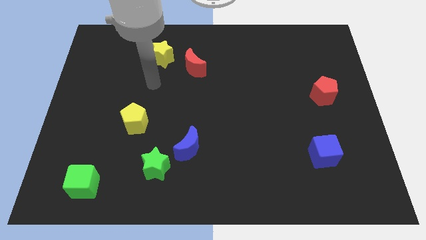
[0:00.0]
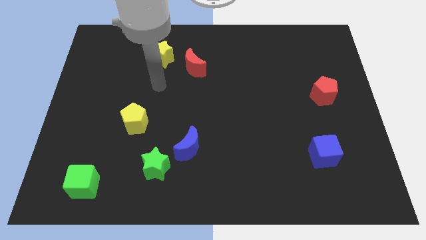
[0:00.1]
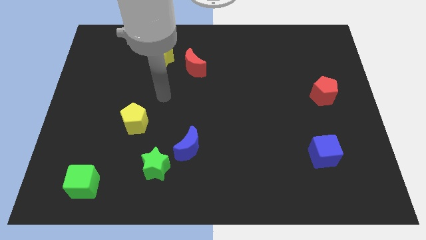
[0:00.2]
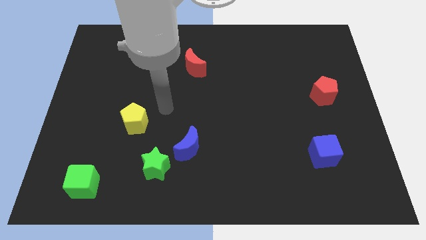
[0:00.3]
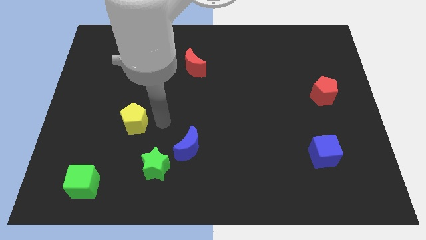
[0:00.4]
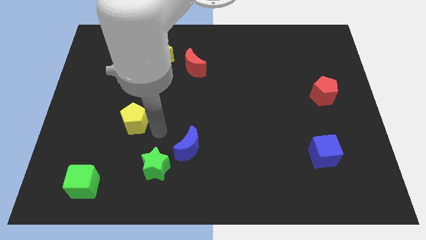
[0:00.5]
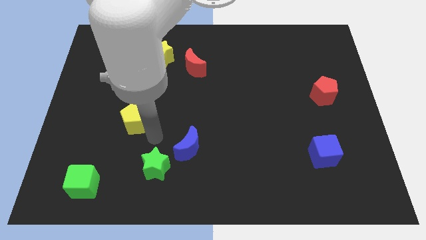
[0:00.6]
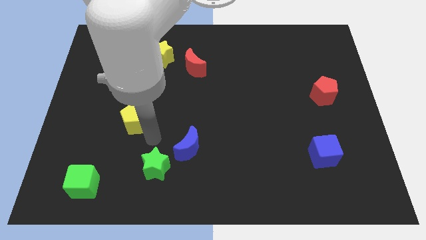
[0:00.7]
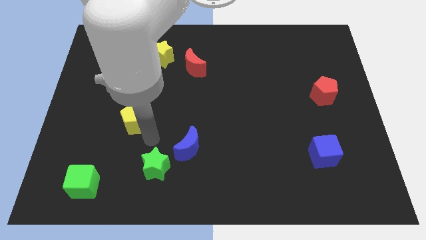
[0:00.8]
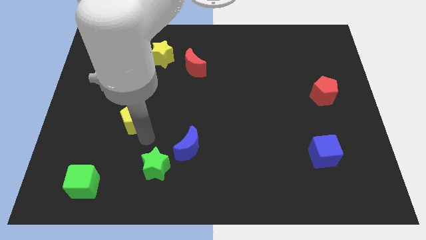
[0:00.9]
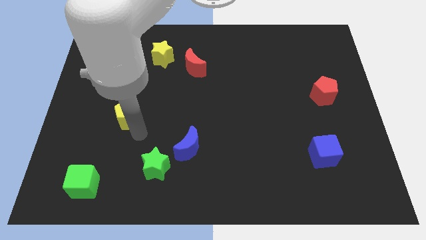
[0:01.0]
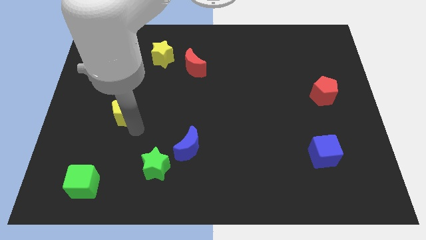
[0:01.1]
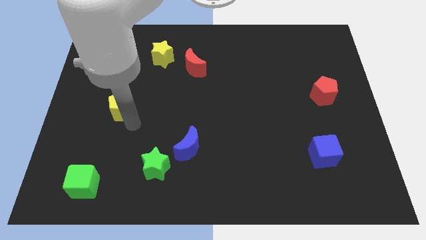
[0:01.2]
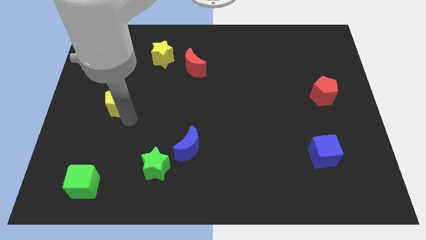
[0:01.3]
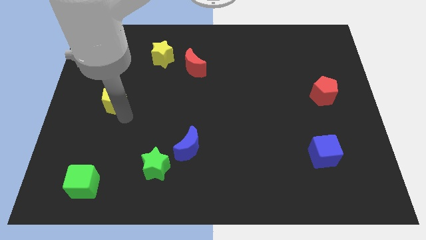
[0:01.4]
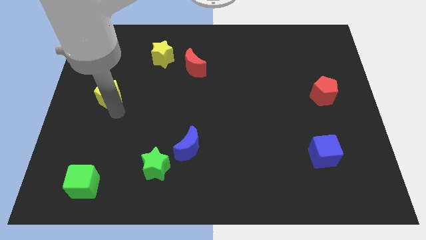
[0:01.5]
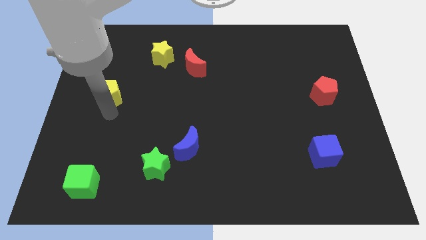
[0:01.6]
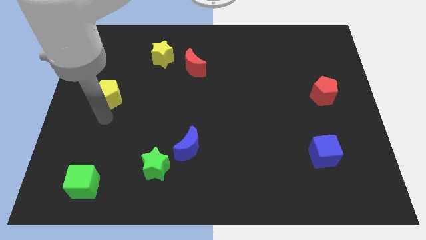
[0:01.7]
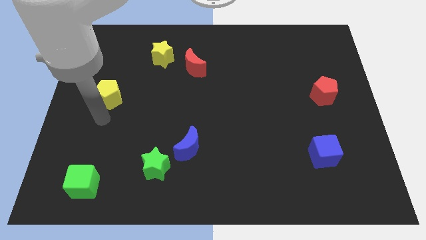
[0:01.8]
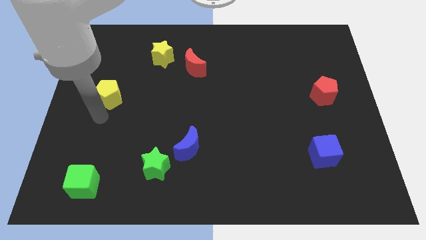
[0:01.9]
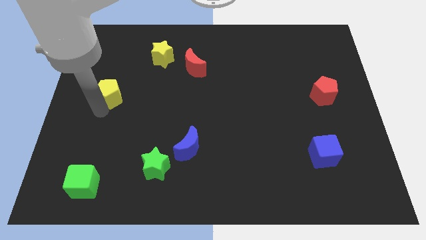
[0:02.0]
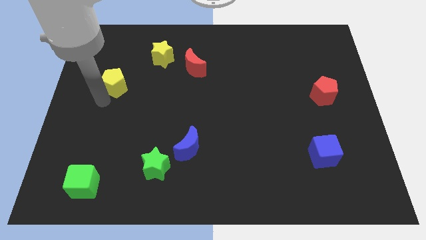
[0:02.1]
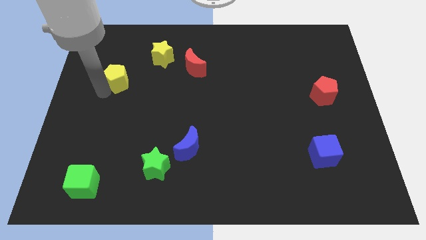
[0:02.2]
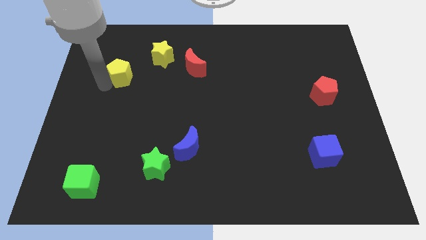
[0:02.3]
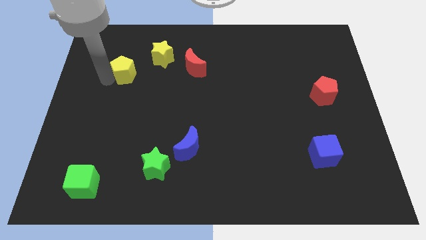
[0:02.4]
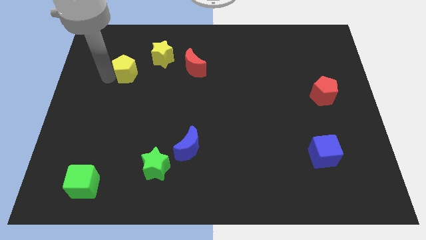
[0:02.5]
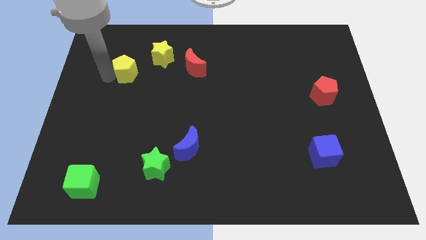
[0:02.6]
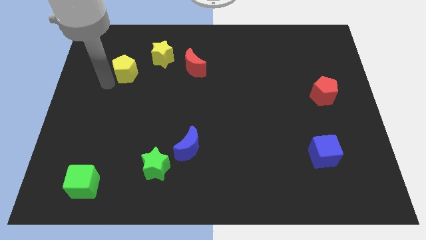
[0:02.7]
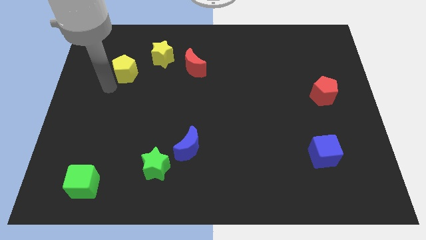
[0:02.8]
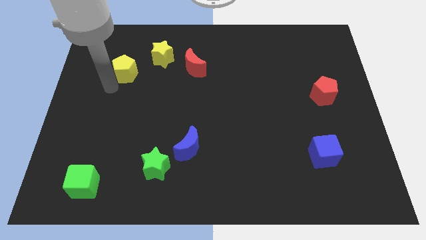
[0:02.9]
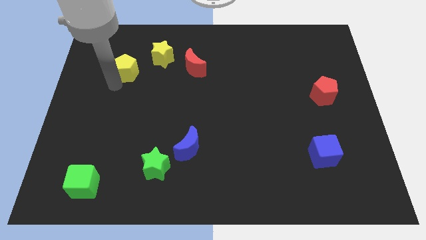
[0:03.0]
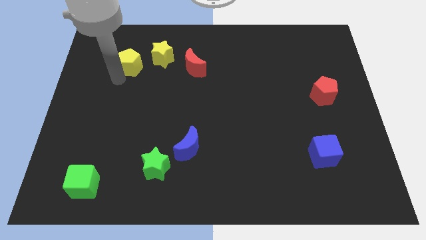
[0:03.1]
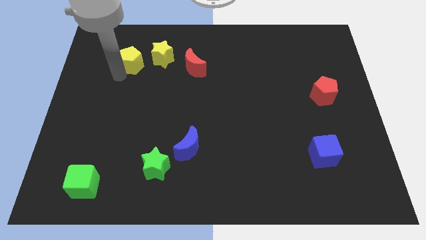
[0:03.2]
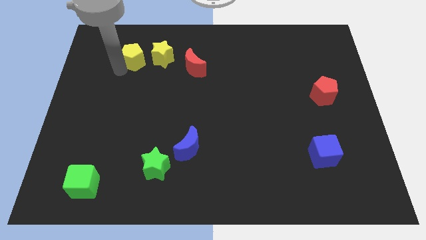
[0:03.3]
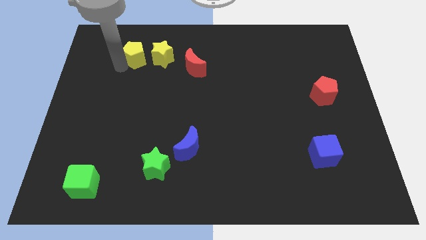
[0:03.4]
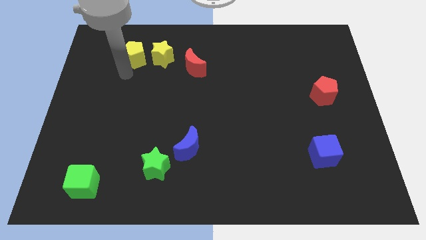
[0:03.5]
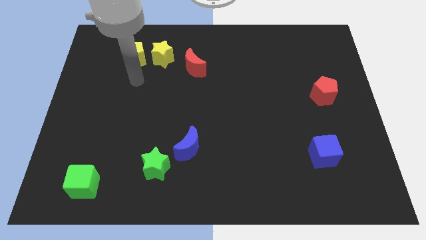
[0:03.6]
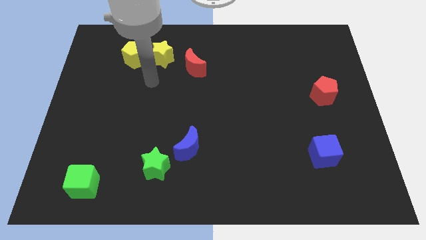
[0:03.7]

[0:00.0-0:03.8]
push the yellow pentagon to the left of the yellow star

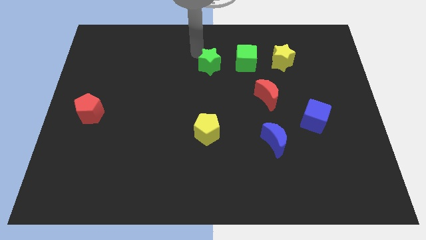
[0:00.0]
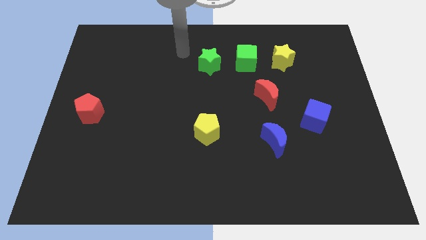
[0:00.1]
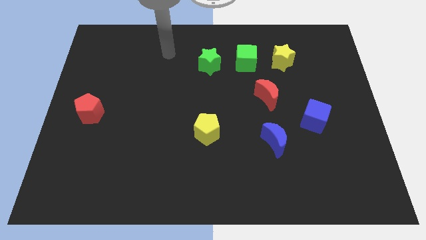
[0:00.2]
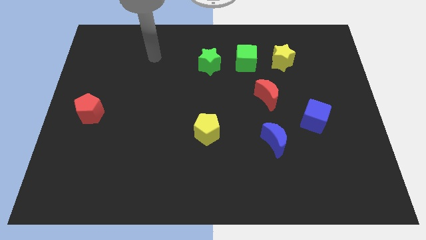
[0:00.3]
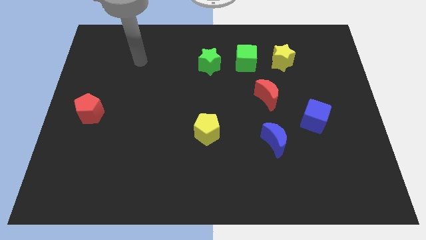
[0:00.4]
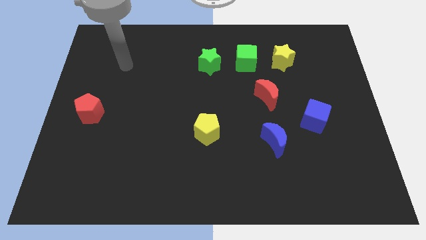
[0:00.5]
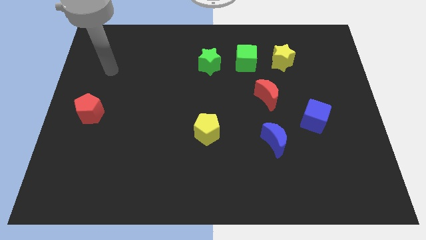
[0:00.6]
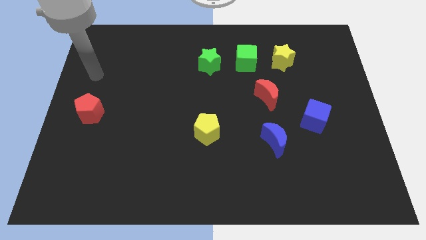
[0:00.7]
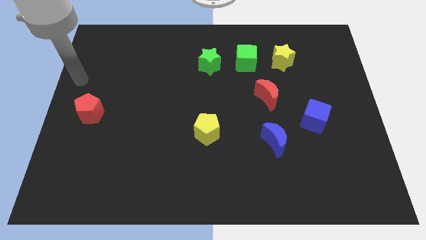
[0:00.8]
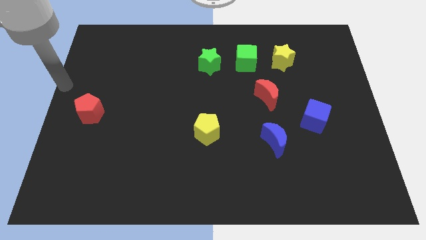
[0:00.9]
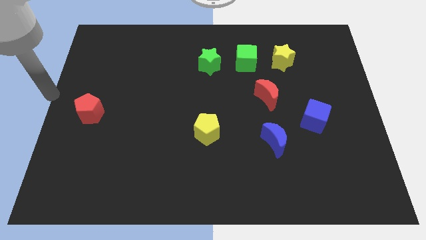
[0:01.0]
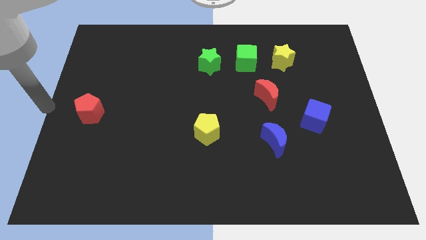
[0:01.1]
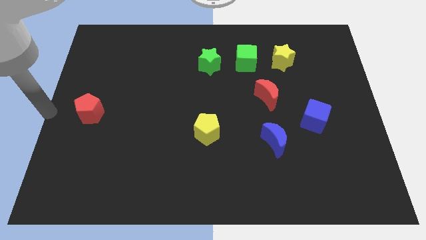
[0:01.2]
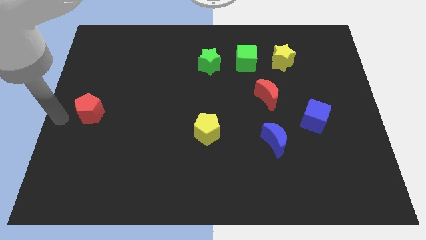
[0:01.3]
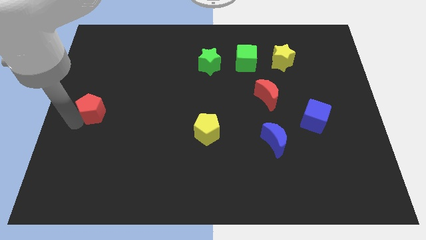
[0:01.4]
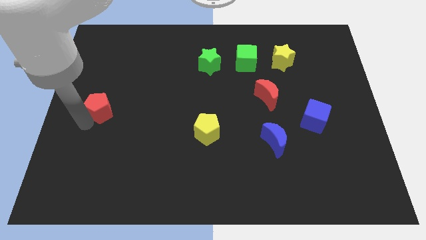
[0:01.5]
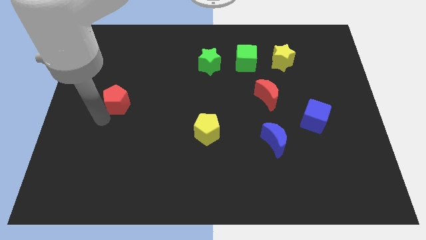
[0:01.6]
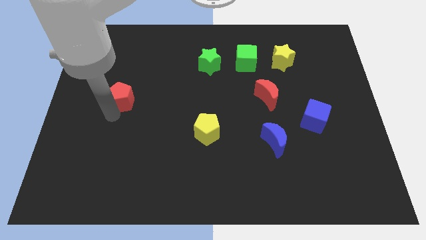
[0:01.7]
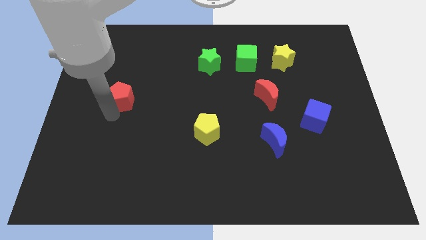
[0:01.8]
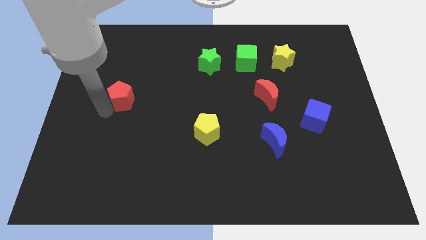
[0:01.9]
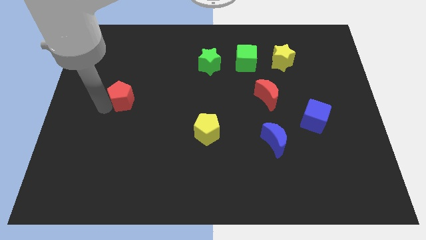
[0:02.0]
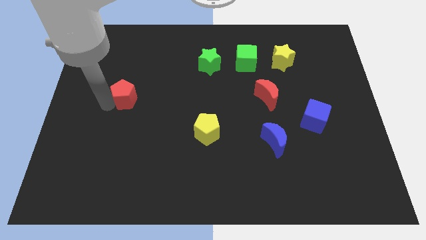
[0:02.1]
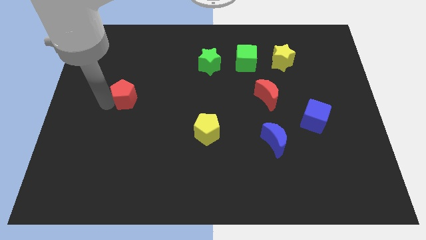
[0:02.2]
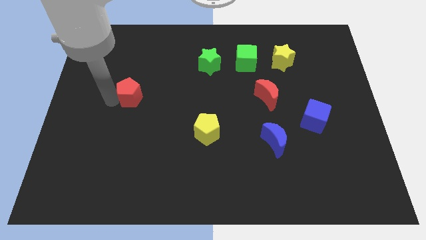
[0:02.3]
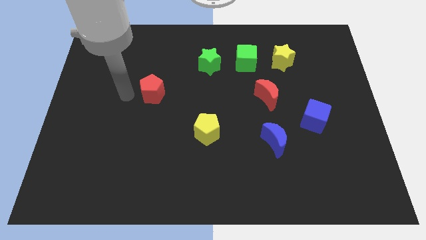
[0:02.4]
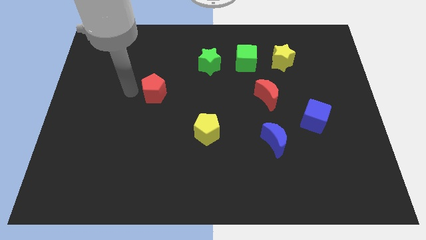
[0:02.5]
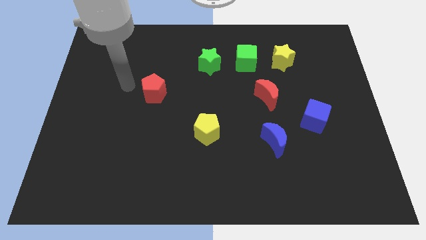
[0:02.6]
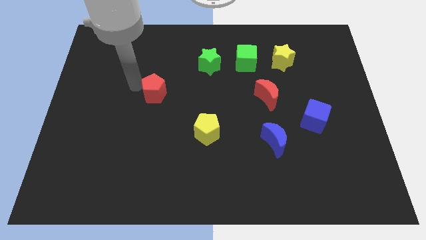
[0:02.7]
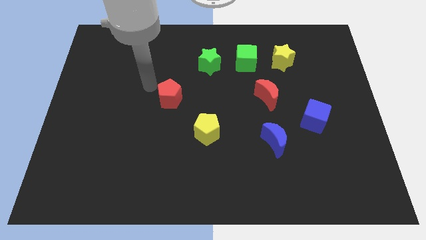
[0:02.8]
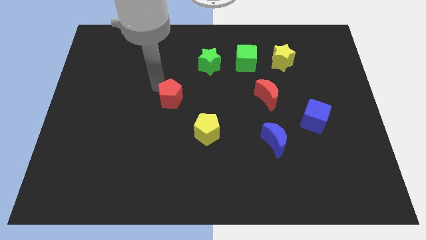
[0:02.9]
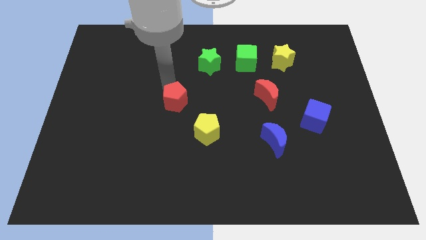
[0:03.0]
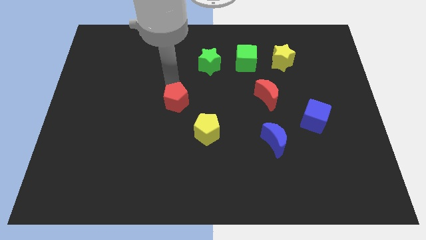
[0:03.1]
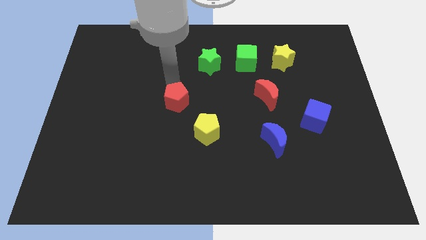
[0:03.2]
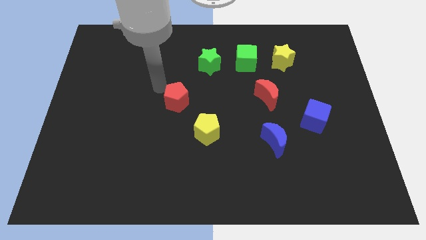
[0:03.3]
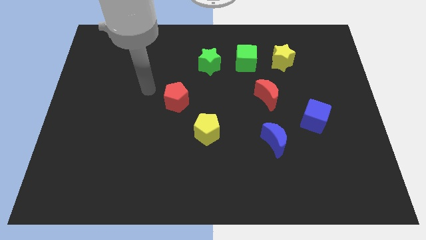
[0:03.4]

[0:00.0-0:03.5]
push the red pentagon towards the center of the board

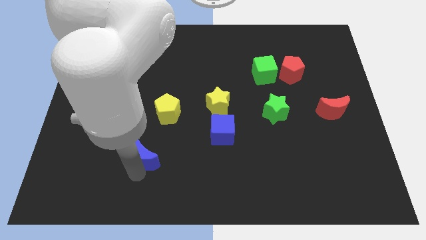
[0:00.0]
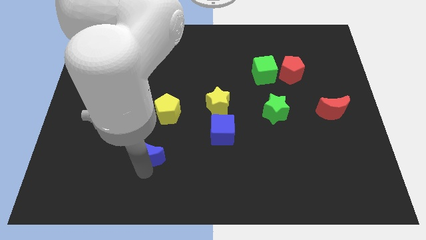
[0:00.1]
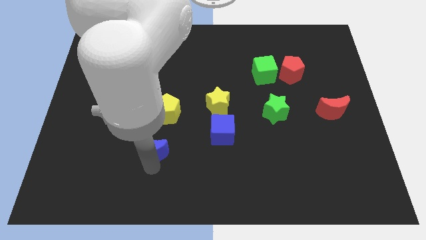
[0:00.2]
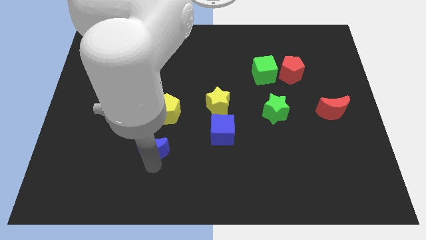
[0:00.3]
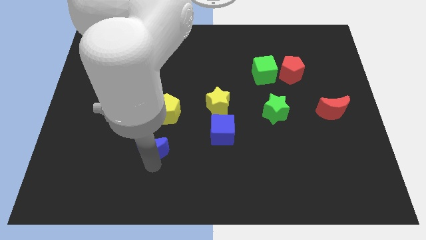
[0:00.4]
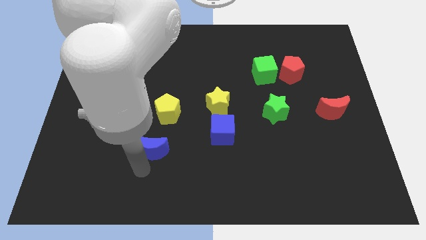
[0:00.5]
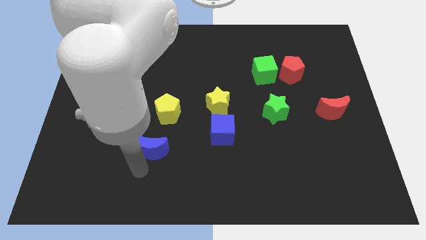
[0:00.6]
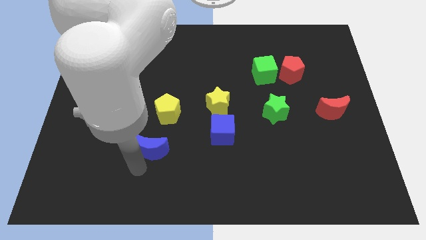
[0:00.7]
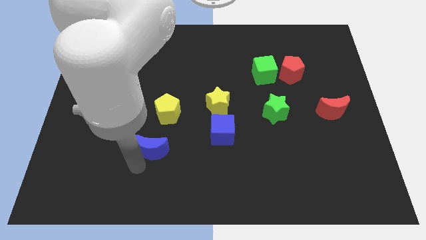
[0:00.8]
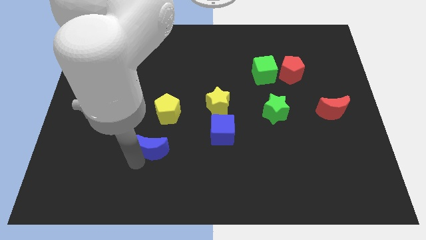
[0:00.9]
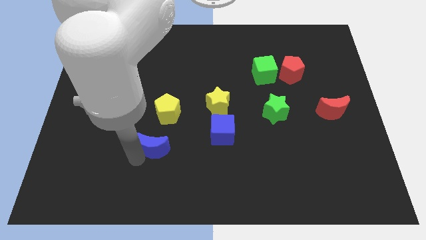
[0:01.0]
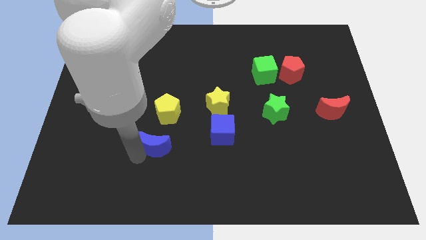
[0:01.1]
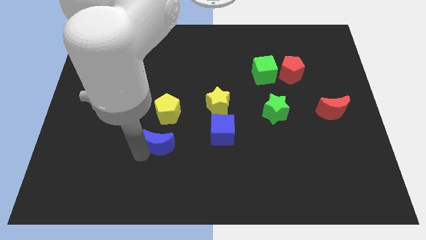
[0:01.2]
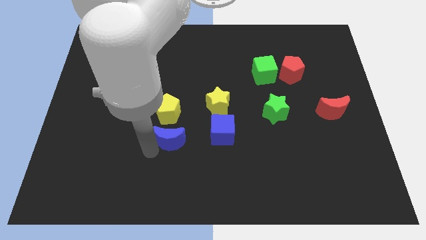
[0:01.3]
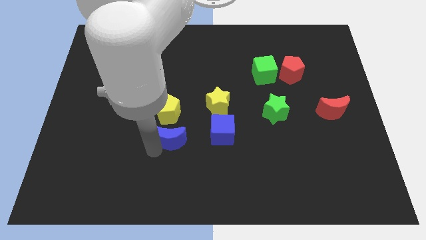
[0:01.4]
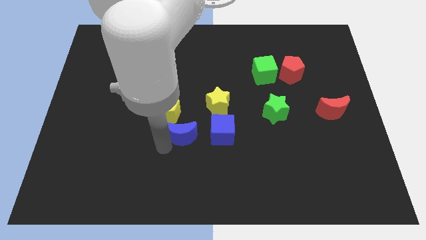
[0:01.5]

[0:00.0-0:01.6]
place the blue moon left to the blue cube
